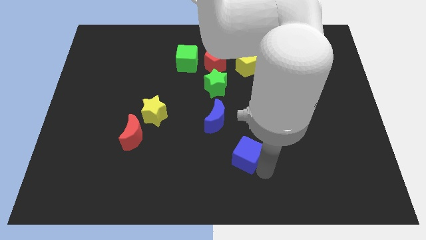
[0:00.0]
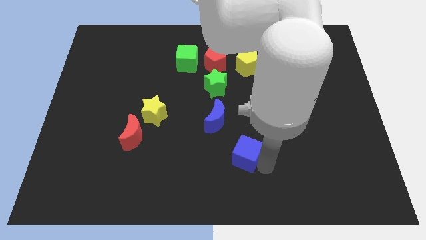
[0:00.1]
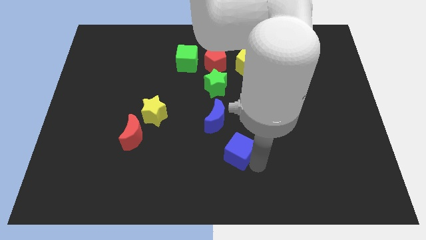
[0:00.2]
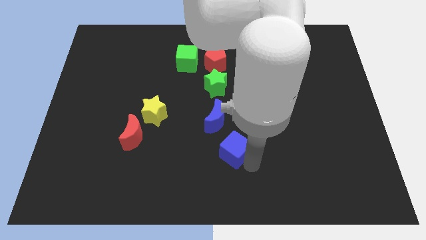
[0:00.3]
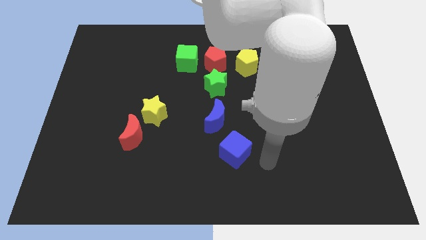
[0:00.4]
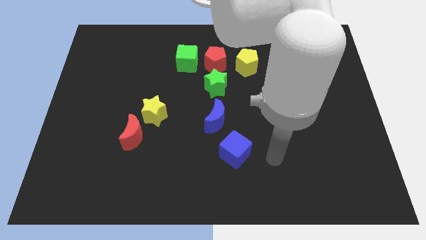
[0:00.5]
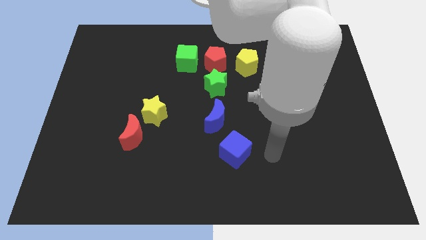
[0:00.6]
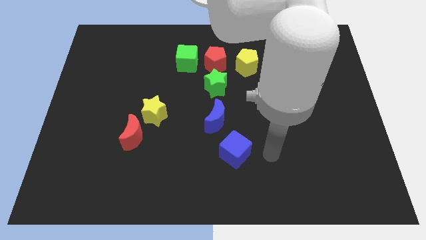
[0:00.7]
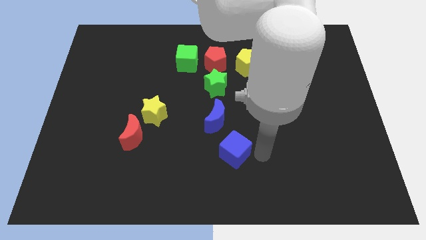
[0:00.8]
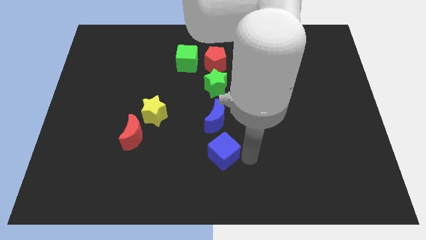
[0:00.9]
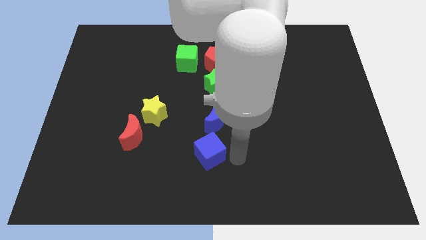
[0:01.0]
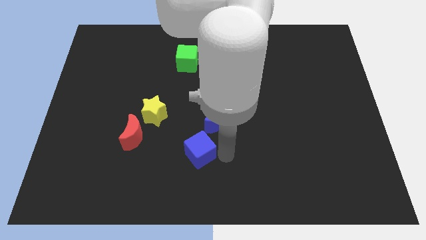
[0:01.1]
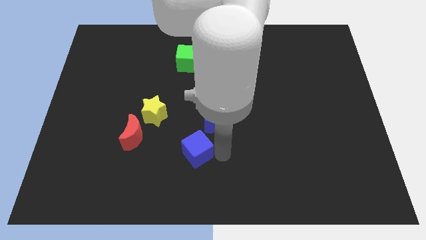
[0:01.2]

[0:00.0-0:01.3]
move blue block to the bottom of blue crescent

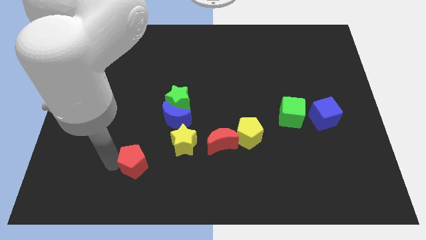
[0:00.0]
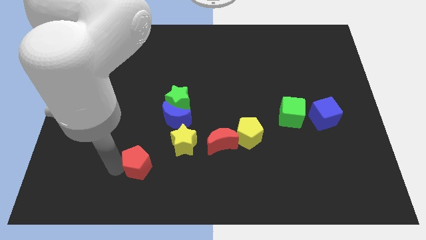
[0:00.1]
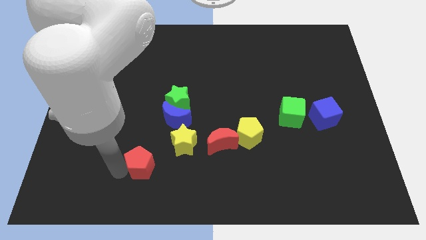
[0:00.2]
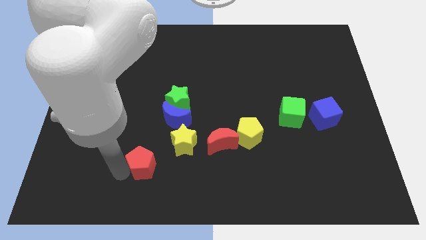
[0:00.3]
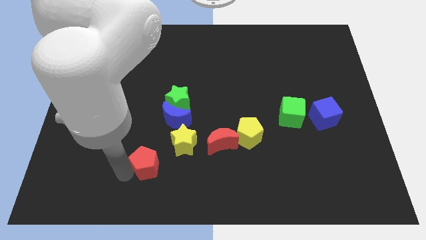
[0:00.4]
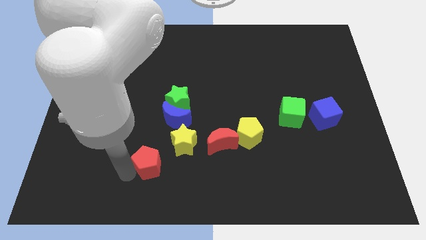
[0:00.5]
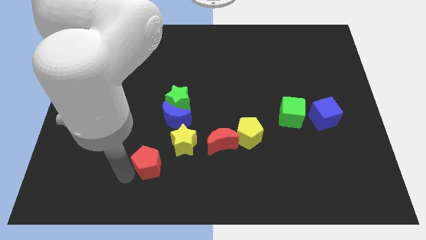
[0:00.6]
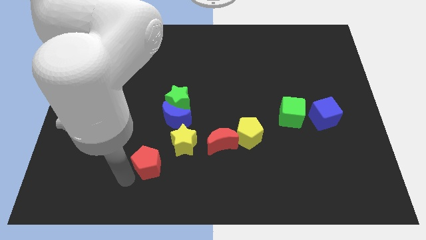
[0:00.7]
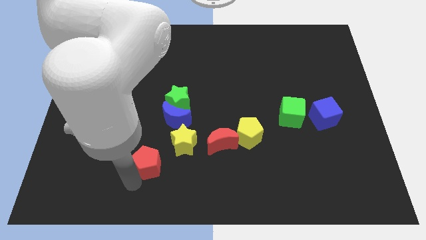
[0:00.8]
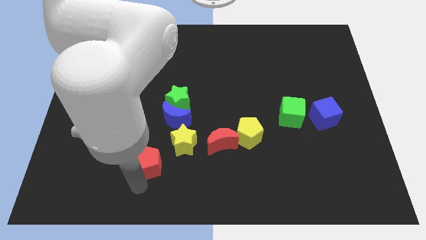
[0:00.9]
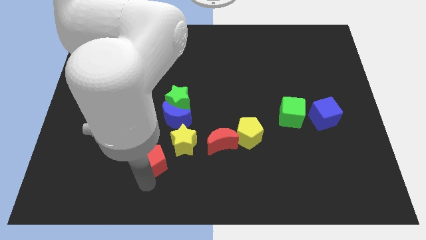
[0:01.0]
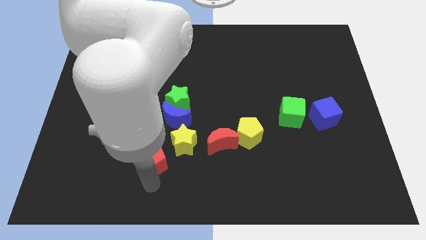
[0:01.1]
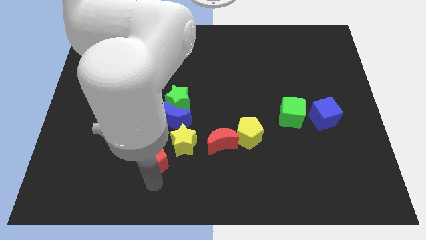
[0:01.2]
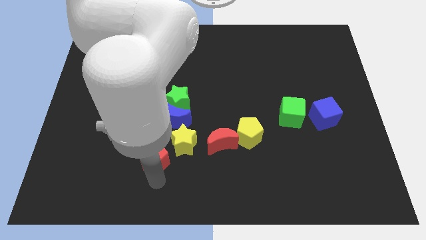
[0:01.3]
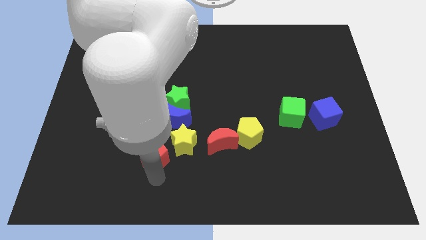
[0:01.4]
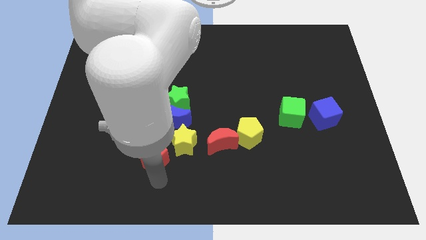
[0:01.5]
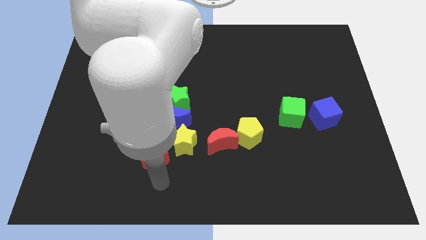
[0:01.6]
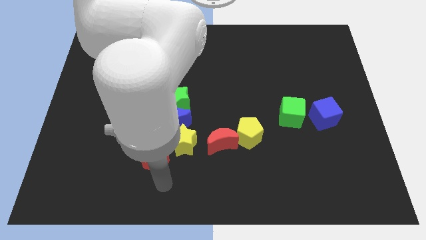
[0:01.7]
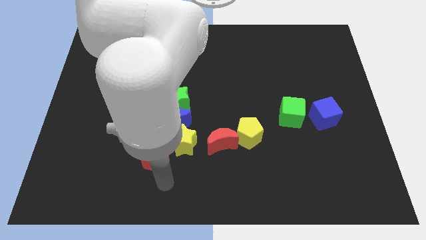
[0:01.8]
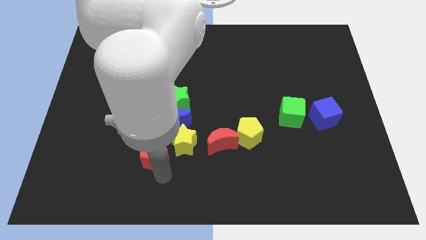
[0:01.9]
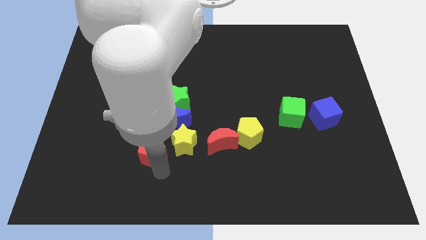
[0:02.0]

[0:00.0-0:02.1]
slide red pentagon towards yellow star

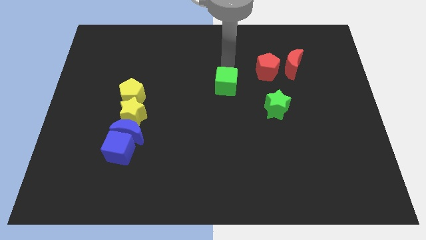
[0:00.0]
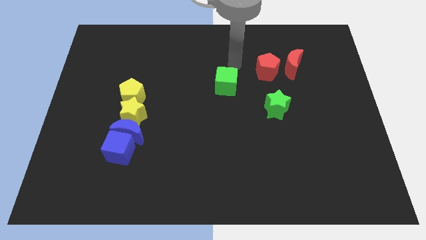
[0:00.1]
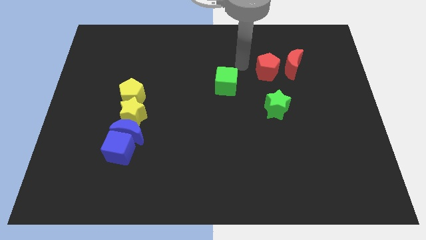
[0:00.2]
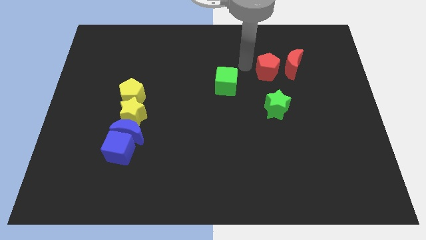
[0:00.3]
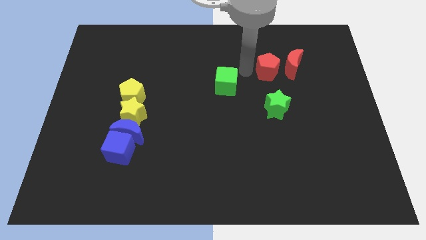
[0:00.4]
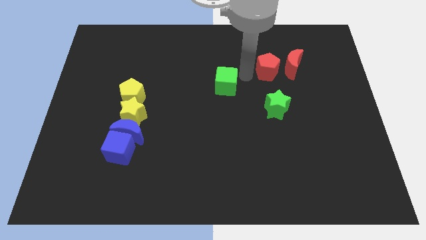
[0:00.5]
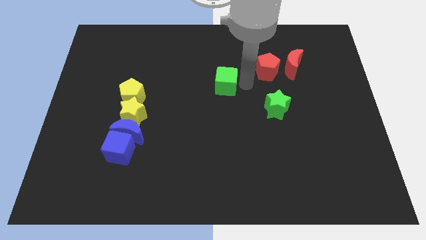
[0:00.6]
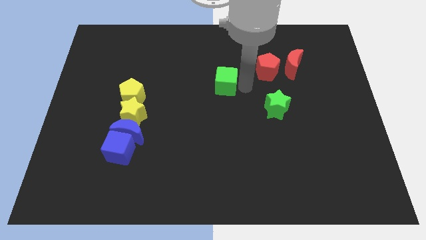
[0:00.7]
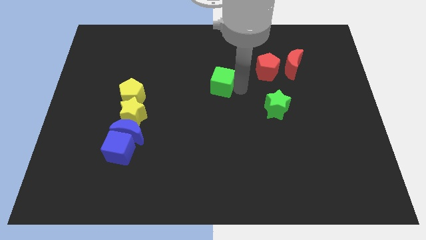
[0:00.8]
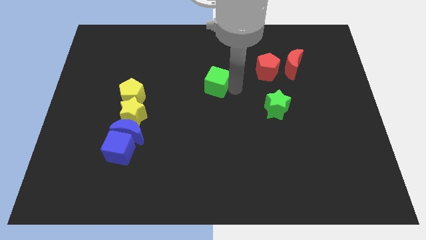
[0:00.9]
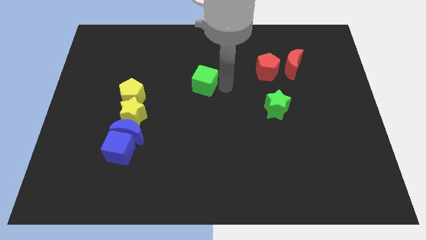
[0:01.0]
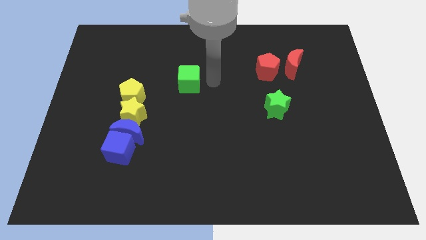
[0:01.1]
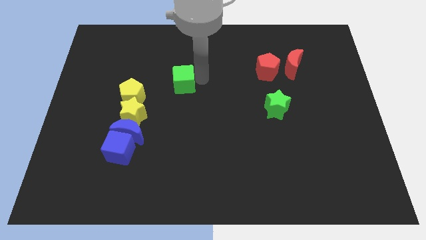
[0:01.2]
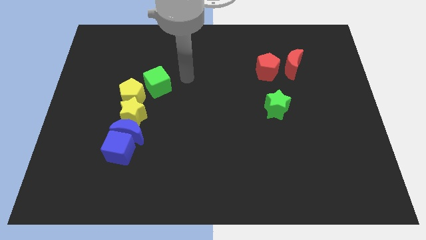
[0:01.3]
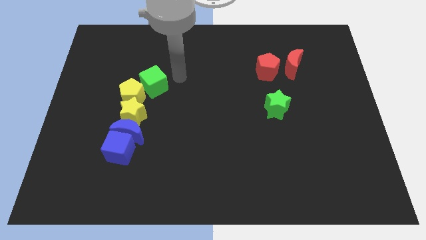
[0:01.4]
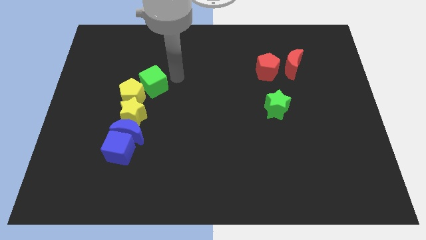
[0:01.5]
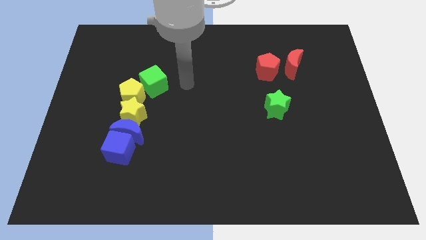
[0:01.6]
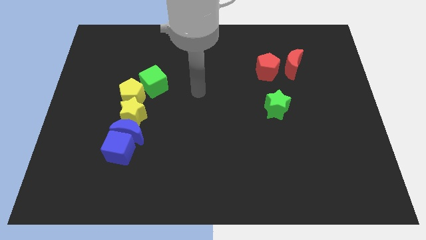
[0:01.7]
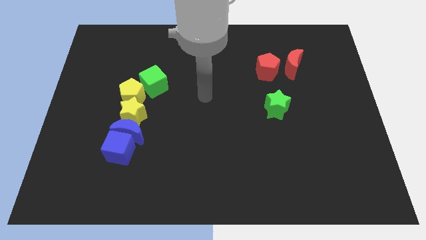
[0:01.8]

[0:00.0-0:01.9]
move the green cube close to the yellow star

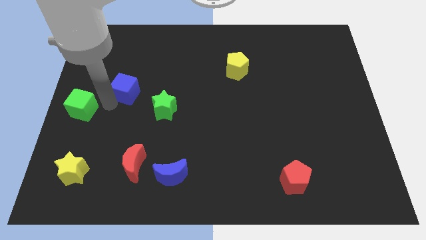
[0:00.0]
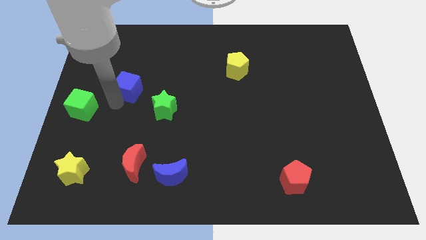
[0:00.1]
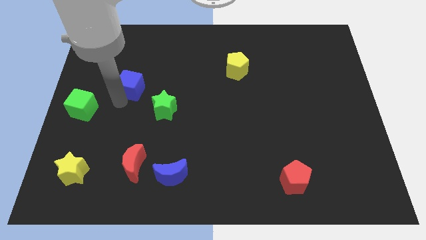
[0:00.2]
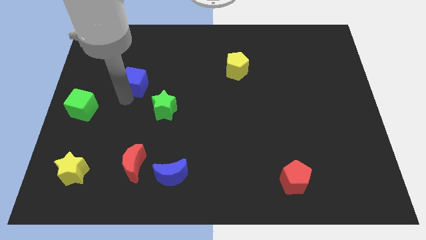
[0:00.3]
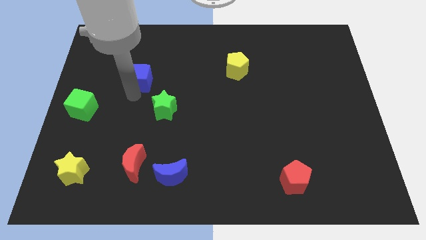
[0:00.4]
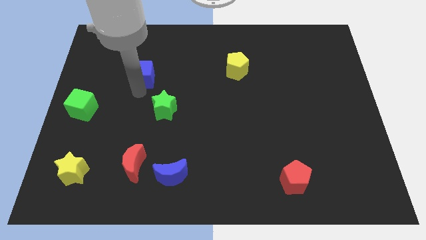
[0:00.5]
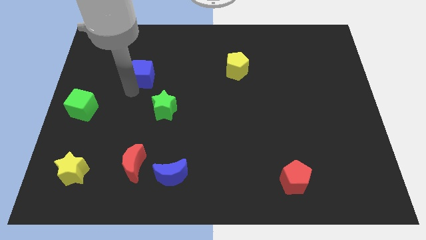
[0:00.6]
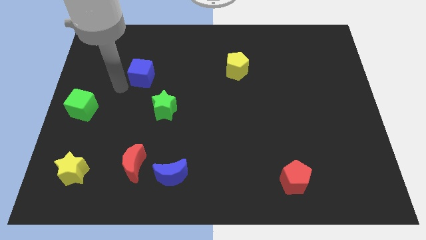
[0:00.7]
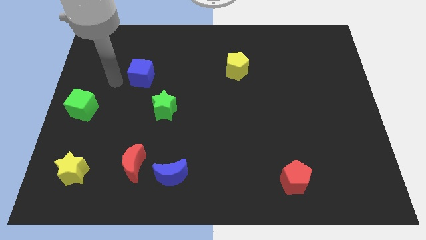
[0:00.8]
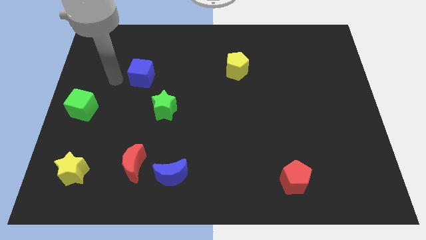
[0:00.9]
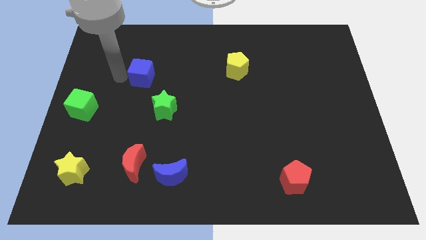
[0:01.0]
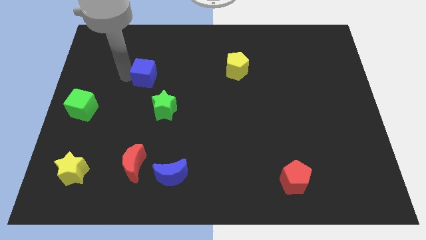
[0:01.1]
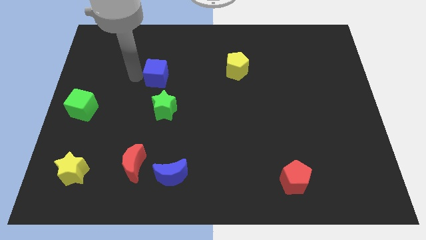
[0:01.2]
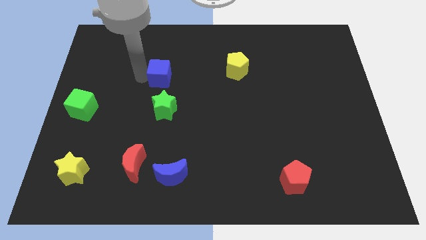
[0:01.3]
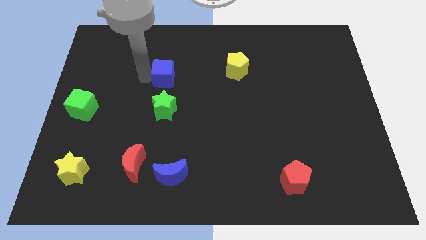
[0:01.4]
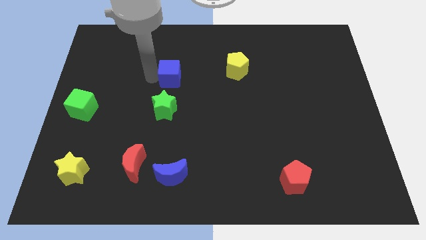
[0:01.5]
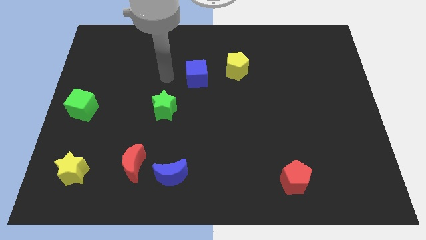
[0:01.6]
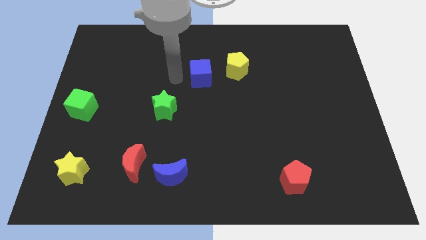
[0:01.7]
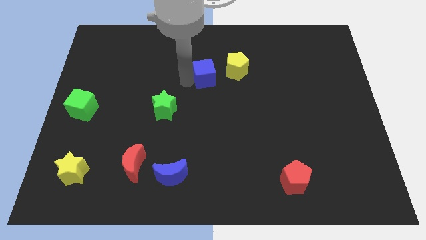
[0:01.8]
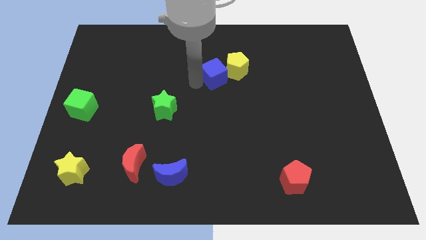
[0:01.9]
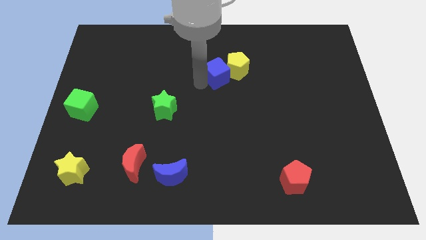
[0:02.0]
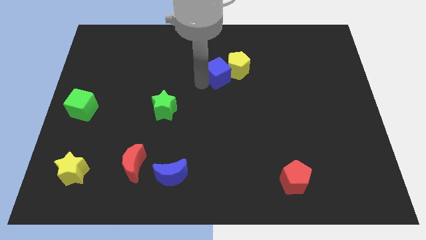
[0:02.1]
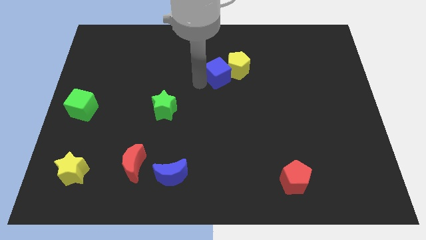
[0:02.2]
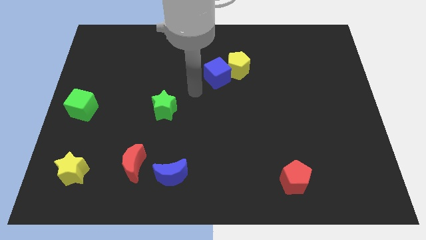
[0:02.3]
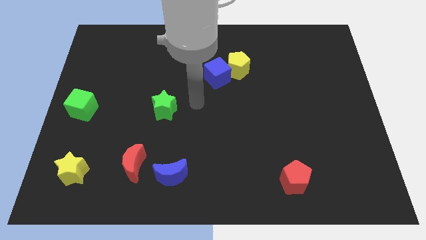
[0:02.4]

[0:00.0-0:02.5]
move the blue cube to the left of the yellow pentagon

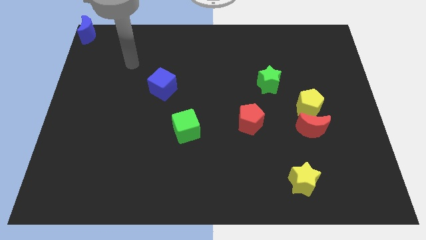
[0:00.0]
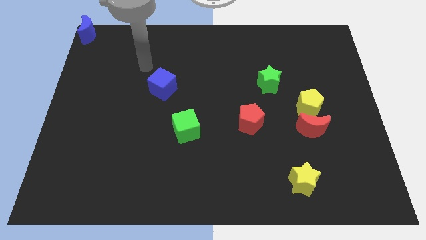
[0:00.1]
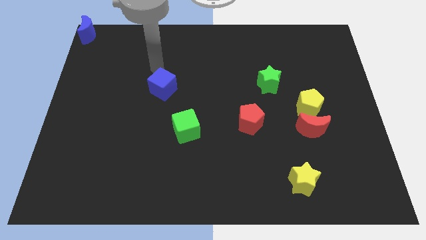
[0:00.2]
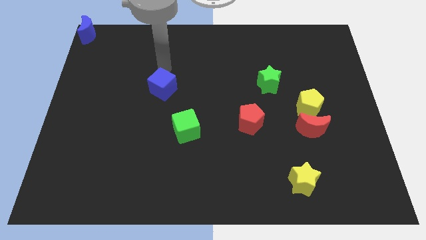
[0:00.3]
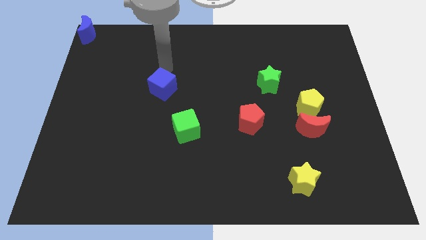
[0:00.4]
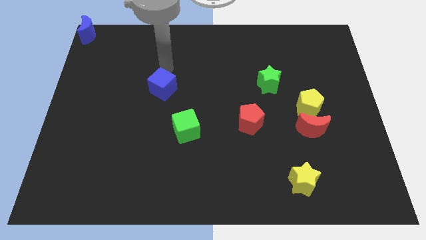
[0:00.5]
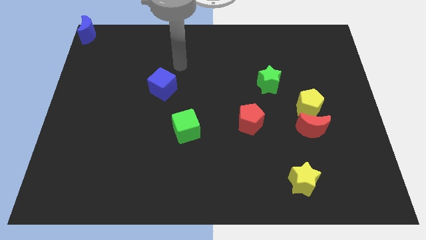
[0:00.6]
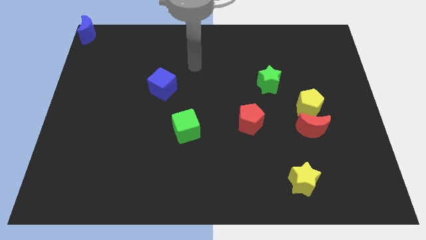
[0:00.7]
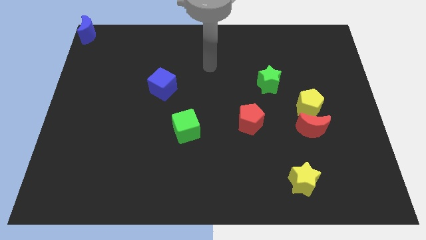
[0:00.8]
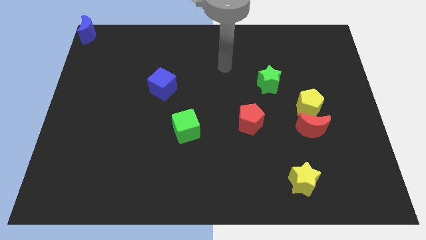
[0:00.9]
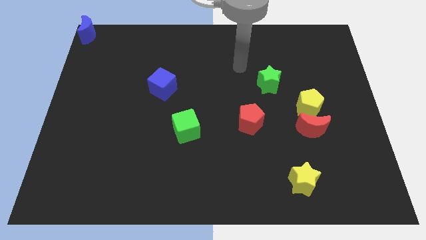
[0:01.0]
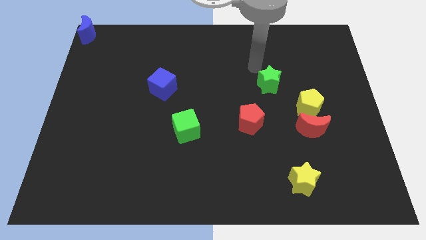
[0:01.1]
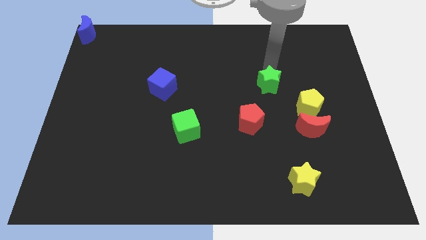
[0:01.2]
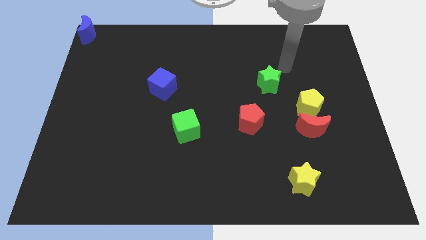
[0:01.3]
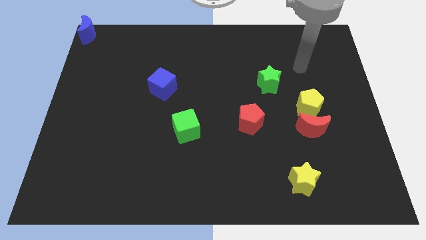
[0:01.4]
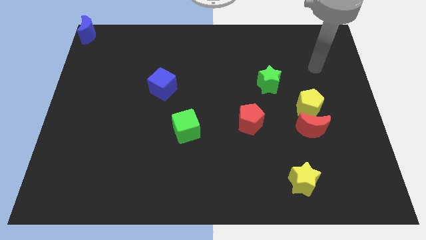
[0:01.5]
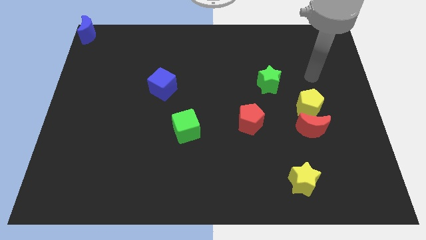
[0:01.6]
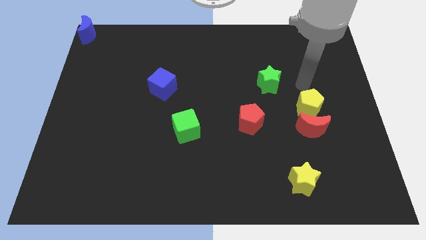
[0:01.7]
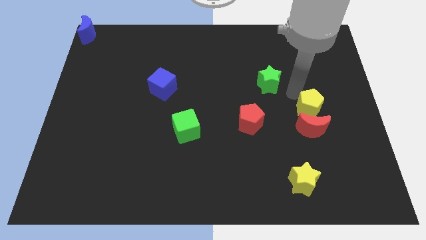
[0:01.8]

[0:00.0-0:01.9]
move your arm towards the yellow pentagon
